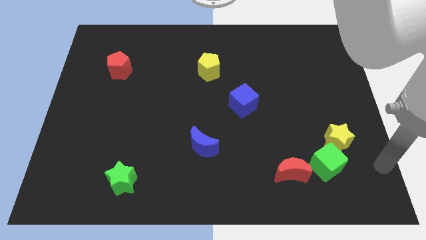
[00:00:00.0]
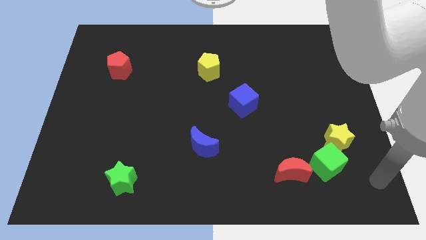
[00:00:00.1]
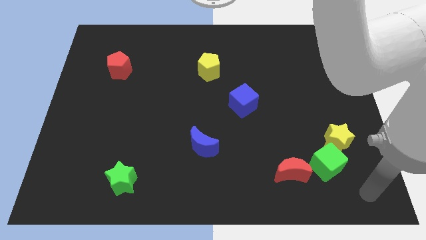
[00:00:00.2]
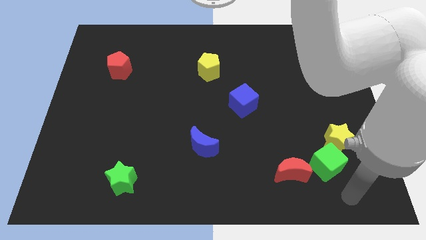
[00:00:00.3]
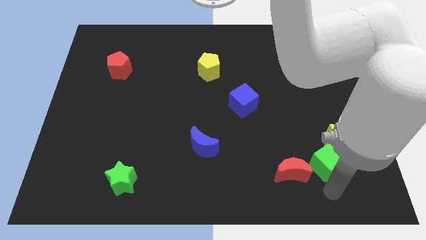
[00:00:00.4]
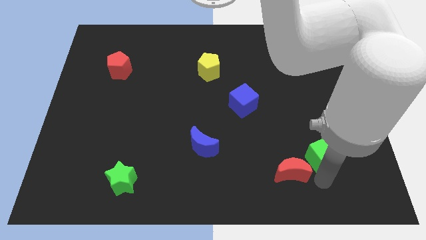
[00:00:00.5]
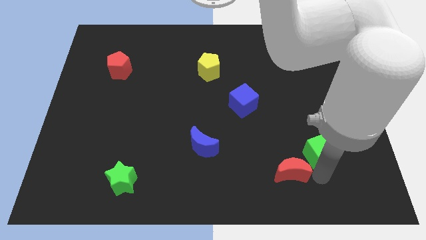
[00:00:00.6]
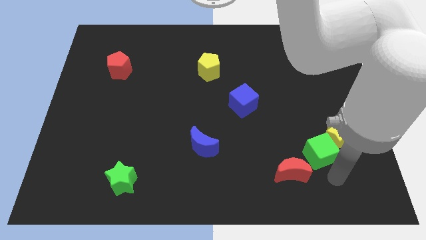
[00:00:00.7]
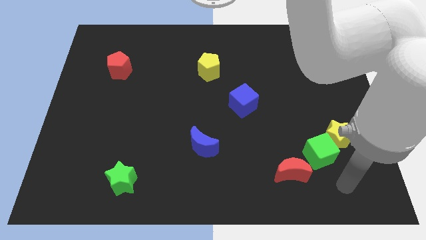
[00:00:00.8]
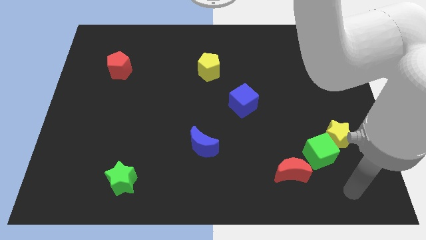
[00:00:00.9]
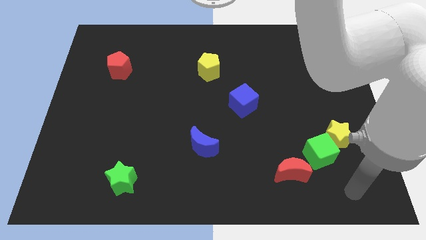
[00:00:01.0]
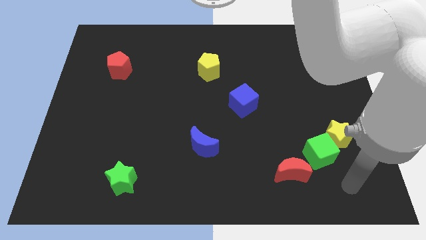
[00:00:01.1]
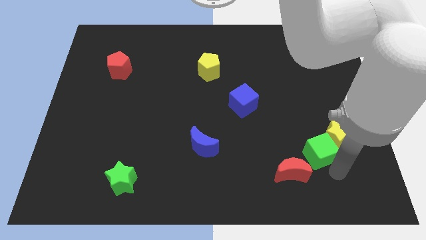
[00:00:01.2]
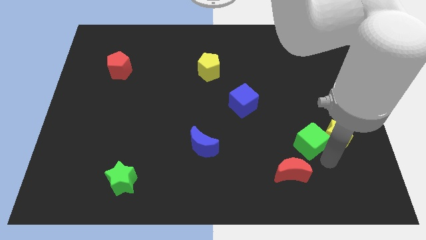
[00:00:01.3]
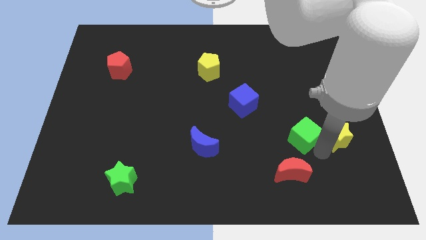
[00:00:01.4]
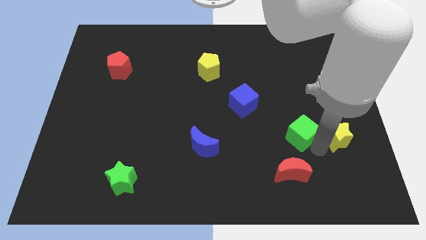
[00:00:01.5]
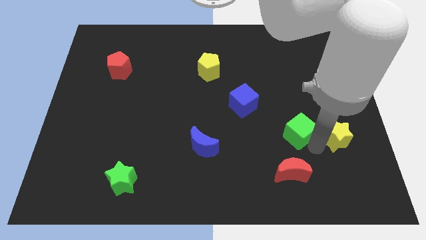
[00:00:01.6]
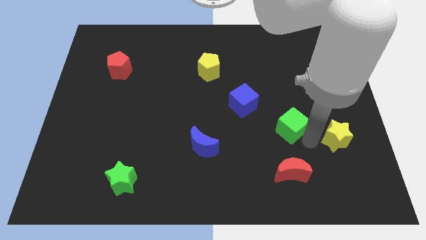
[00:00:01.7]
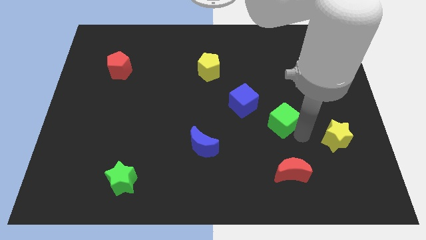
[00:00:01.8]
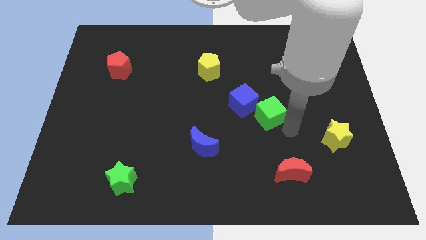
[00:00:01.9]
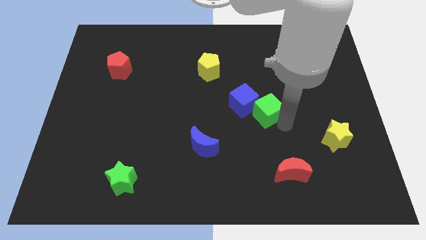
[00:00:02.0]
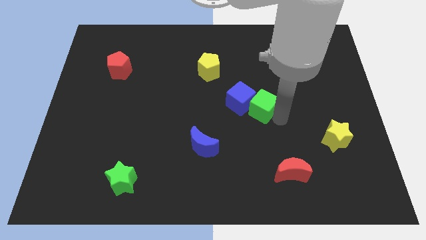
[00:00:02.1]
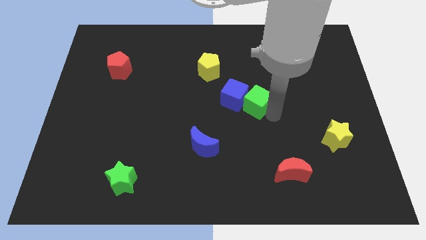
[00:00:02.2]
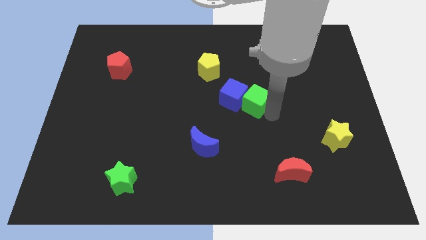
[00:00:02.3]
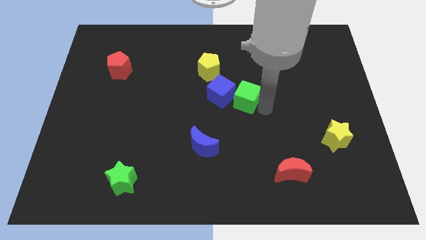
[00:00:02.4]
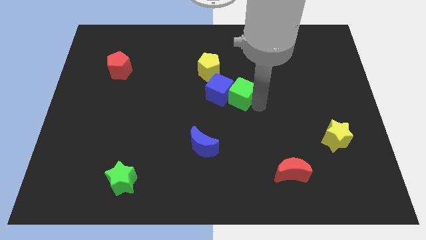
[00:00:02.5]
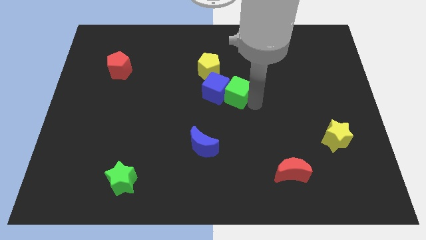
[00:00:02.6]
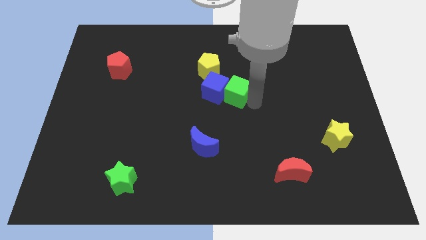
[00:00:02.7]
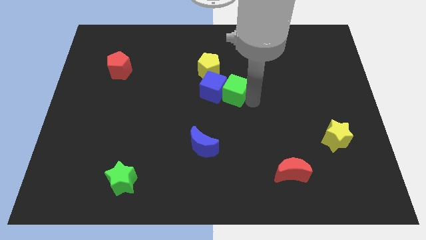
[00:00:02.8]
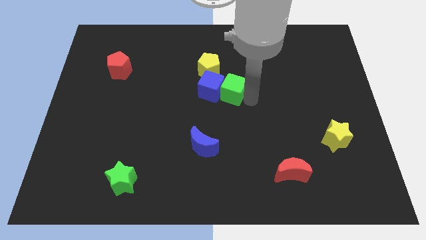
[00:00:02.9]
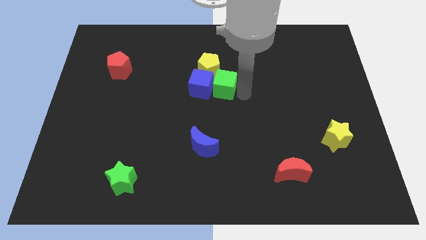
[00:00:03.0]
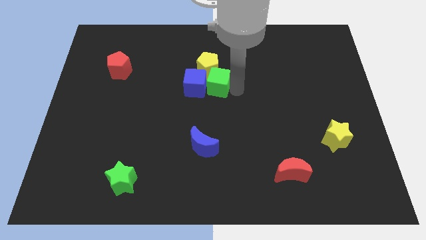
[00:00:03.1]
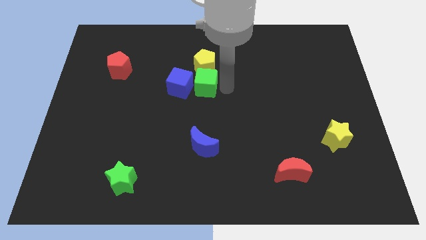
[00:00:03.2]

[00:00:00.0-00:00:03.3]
slide the green cube and blue cube into the bottom side of the yellow pentagon

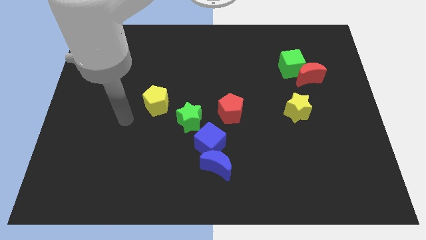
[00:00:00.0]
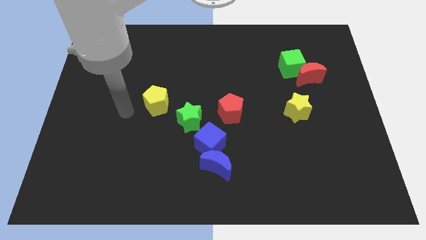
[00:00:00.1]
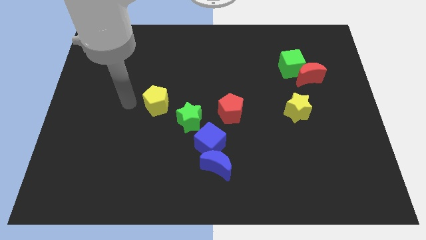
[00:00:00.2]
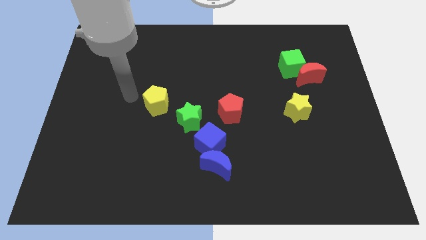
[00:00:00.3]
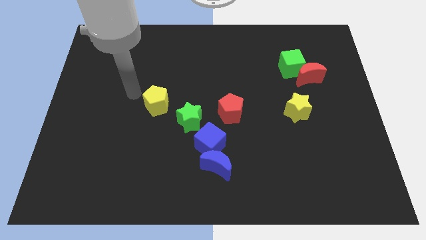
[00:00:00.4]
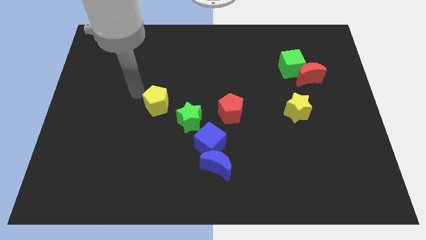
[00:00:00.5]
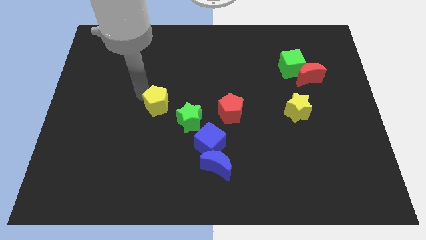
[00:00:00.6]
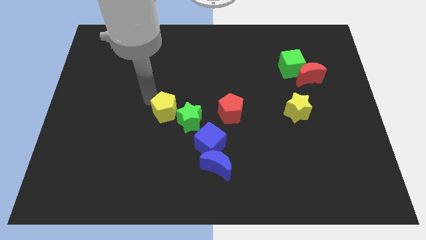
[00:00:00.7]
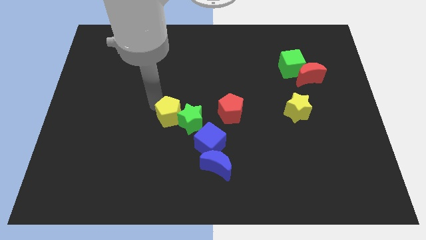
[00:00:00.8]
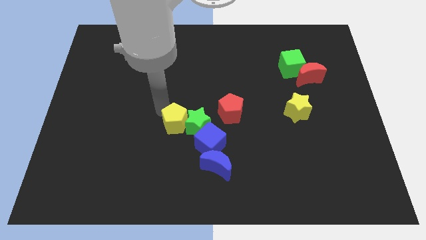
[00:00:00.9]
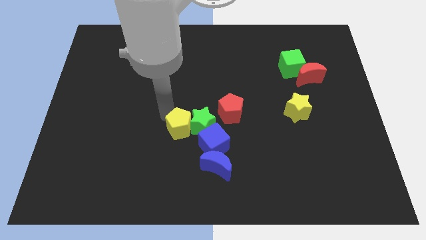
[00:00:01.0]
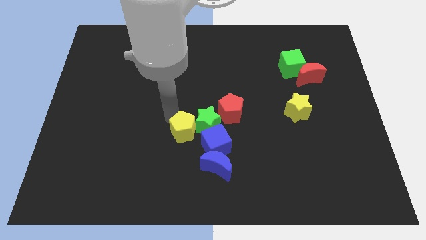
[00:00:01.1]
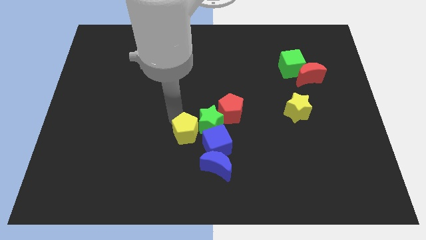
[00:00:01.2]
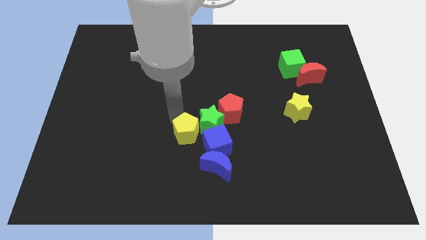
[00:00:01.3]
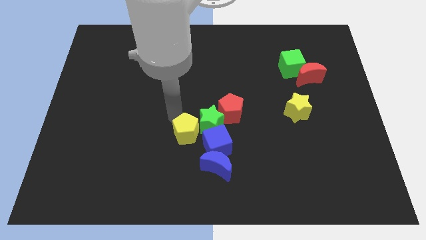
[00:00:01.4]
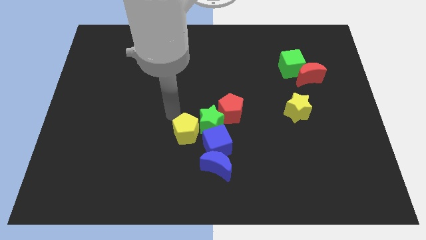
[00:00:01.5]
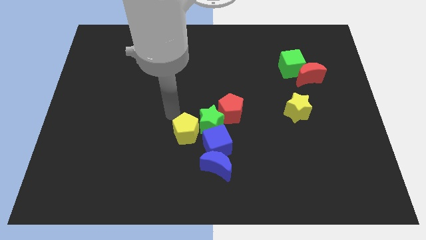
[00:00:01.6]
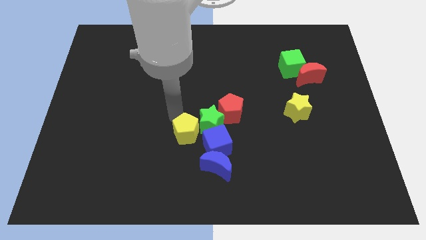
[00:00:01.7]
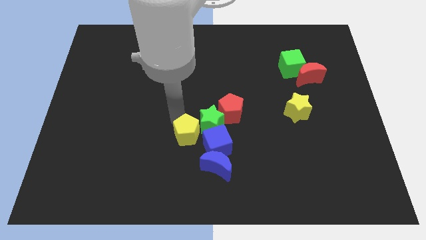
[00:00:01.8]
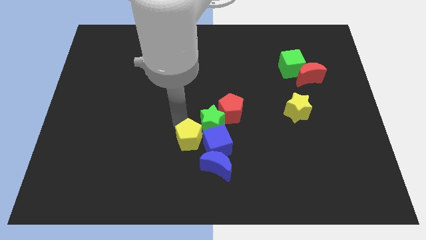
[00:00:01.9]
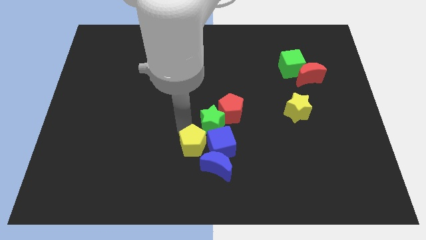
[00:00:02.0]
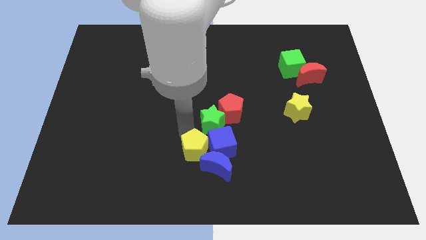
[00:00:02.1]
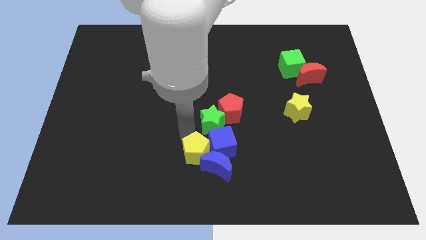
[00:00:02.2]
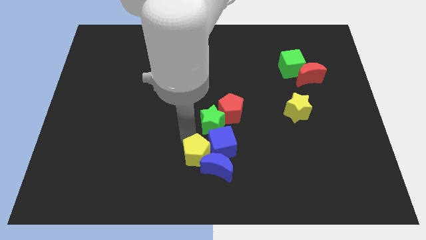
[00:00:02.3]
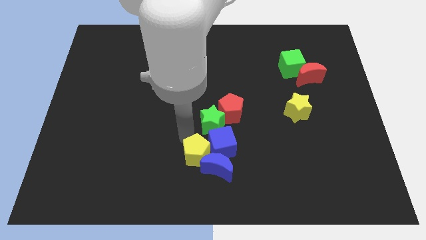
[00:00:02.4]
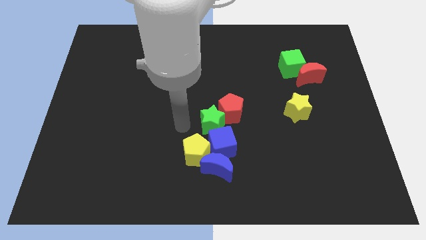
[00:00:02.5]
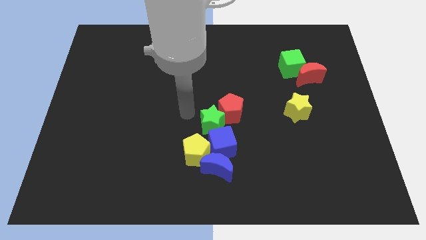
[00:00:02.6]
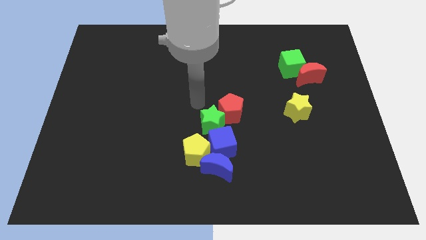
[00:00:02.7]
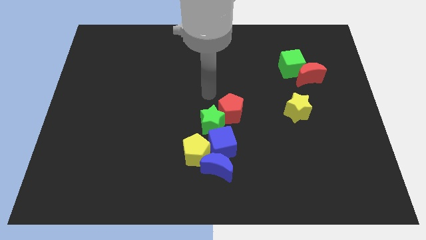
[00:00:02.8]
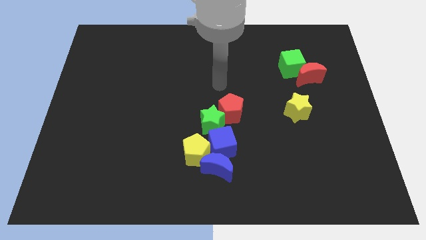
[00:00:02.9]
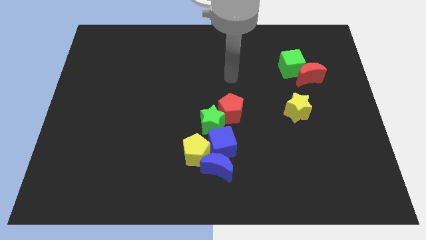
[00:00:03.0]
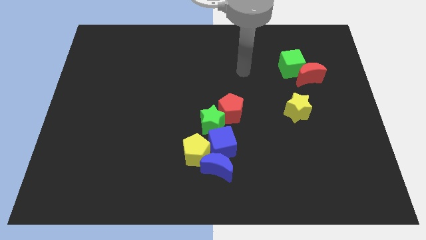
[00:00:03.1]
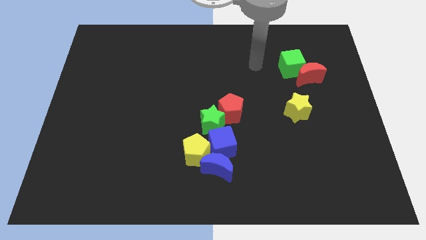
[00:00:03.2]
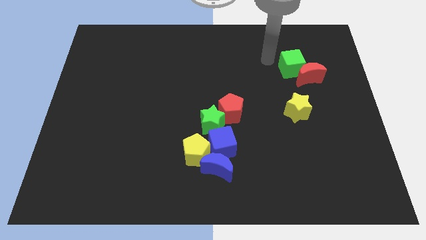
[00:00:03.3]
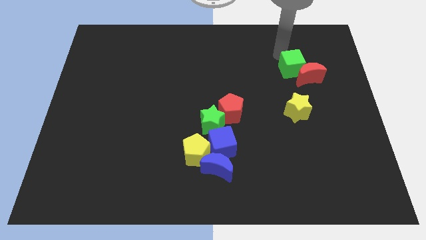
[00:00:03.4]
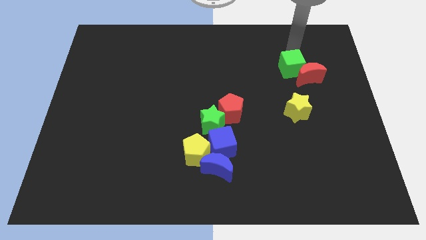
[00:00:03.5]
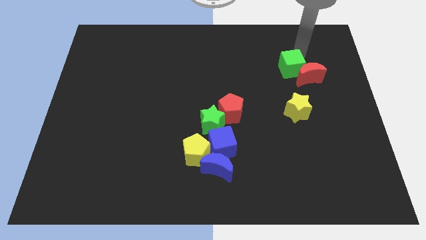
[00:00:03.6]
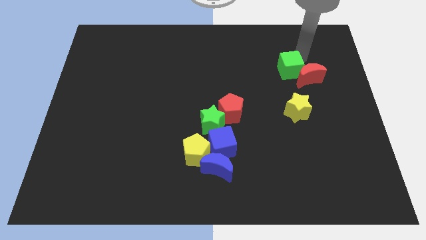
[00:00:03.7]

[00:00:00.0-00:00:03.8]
move the blue cube slightly with the green cube

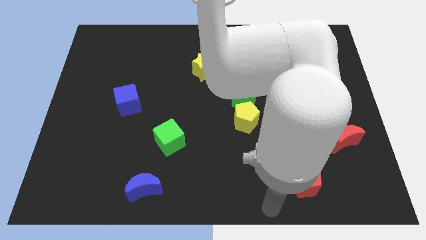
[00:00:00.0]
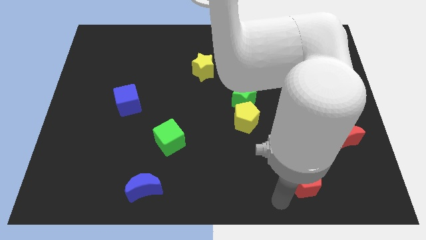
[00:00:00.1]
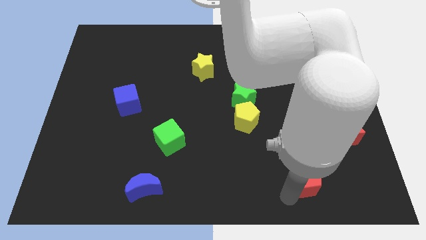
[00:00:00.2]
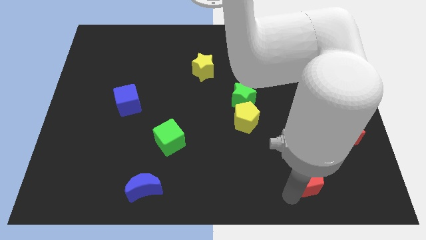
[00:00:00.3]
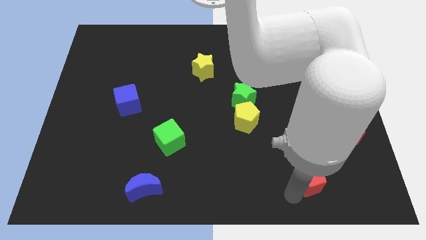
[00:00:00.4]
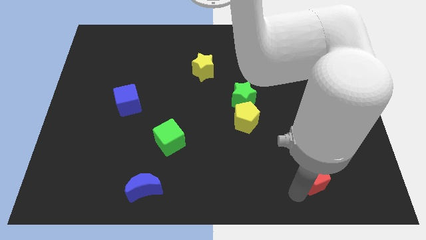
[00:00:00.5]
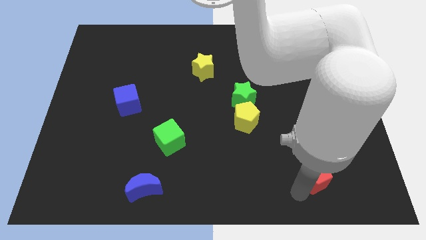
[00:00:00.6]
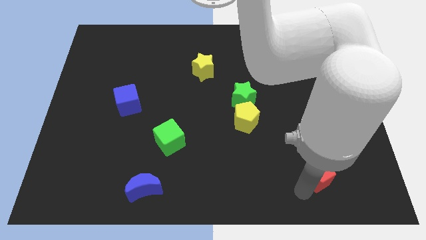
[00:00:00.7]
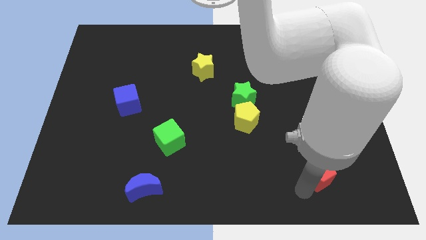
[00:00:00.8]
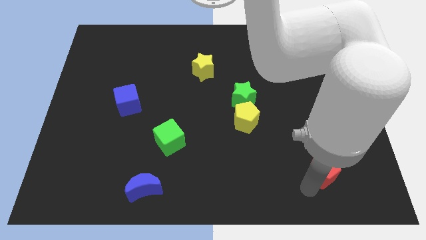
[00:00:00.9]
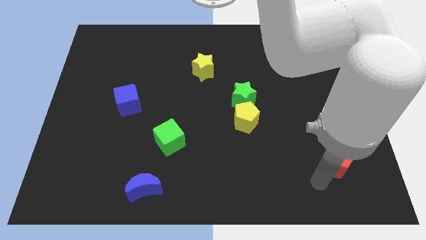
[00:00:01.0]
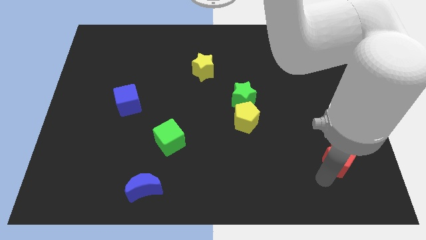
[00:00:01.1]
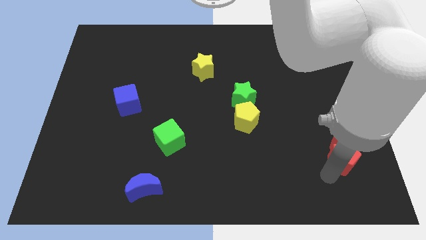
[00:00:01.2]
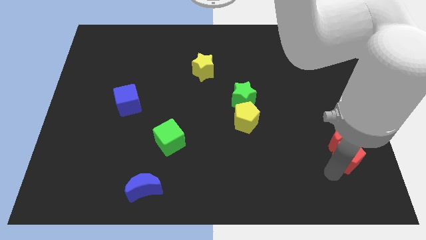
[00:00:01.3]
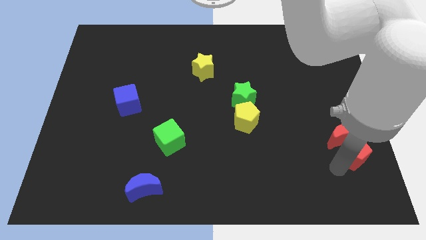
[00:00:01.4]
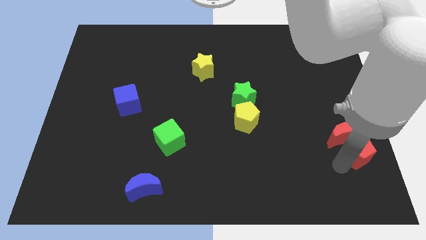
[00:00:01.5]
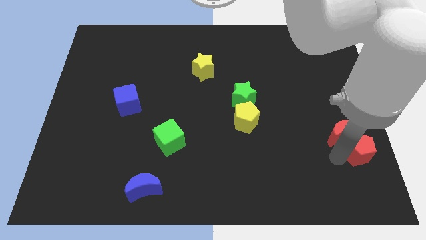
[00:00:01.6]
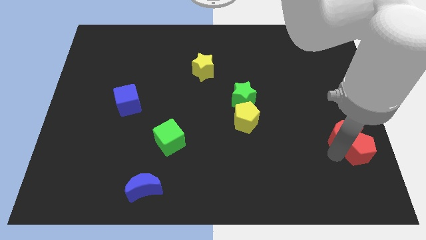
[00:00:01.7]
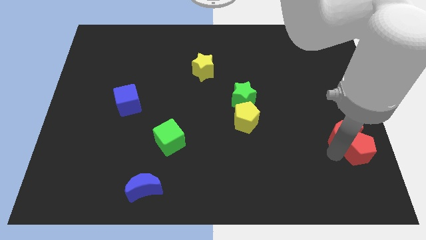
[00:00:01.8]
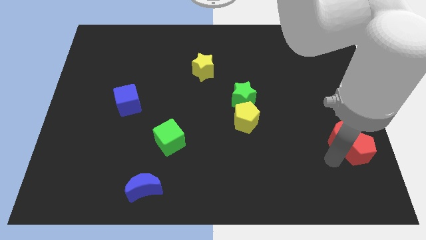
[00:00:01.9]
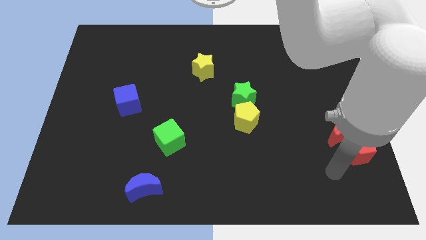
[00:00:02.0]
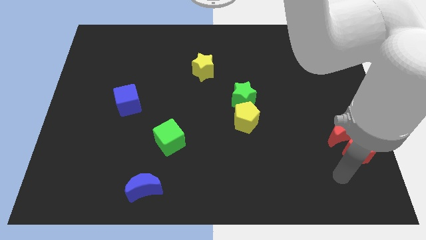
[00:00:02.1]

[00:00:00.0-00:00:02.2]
push the red pentagon into red moon
